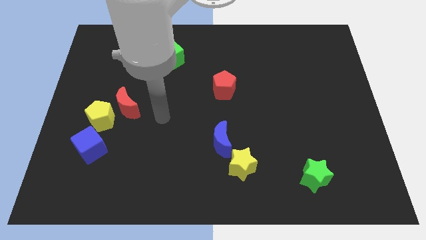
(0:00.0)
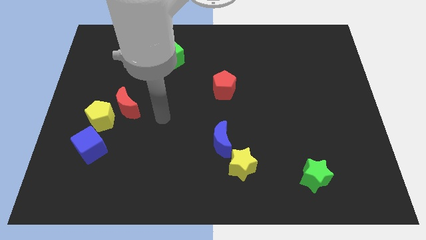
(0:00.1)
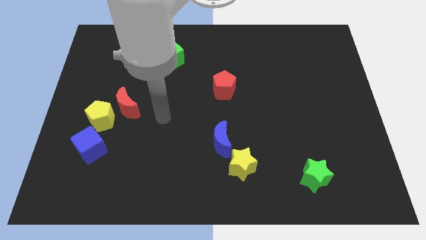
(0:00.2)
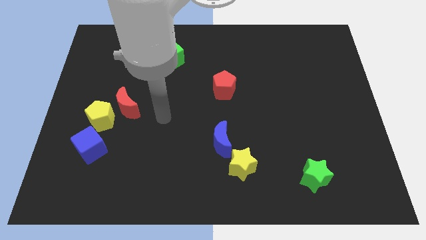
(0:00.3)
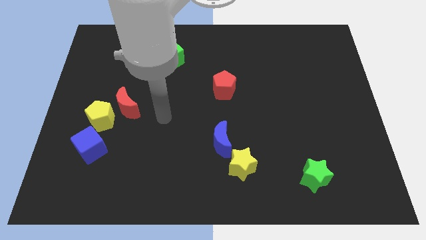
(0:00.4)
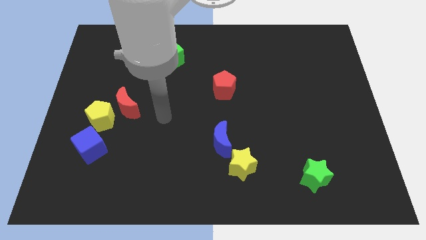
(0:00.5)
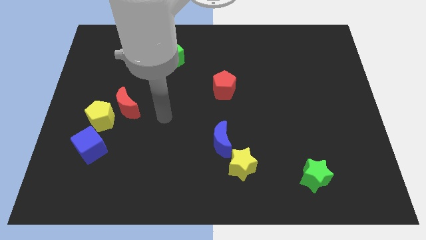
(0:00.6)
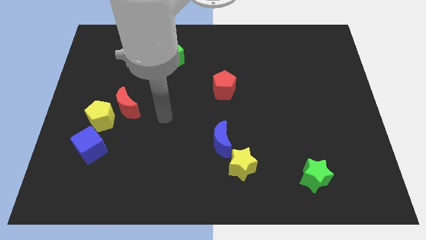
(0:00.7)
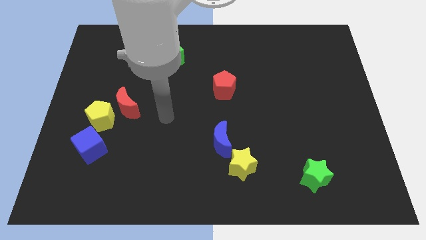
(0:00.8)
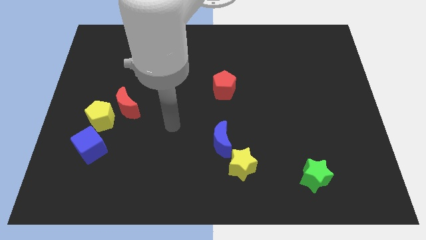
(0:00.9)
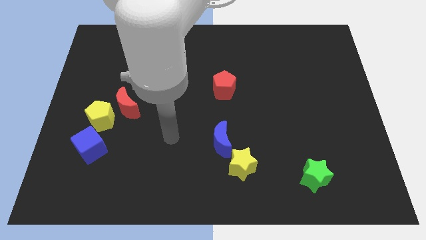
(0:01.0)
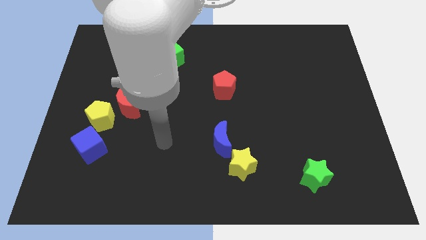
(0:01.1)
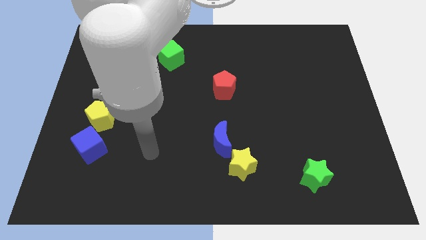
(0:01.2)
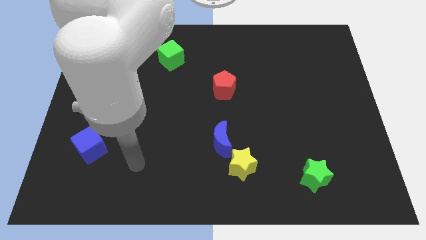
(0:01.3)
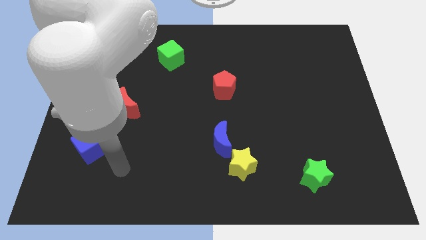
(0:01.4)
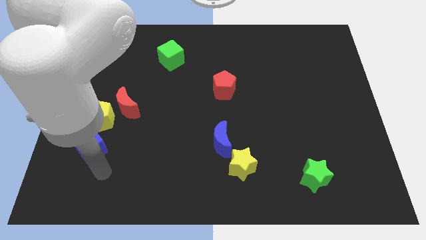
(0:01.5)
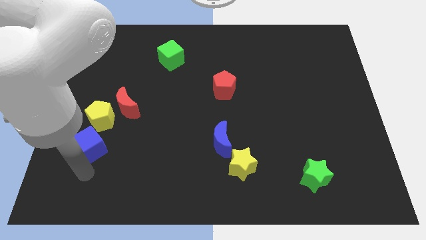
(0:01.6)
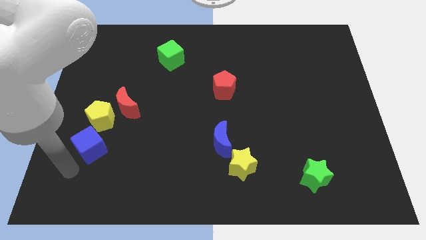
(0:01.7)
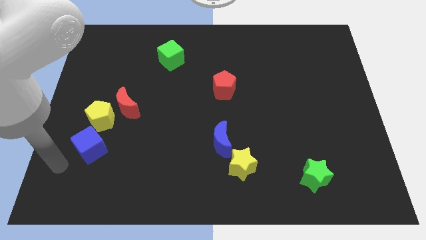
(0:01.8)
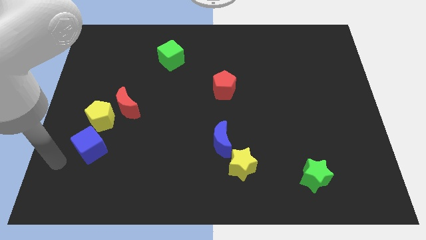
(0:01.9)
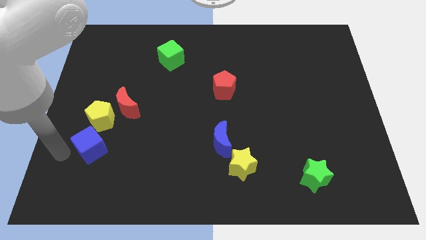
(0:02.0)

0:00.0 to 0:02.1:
place the arm at the left of the blue cube

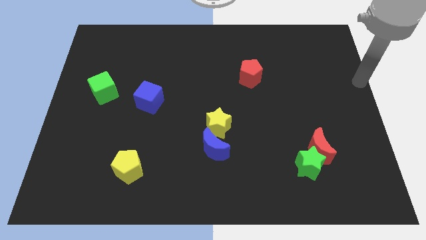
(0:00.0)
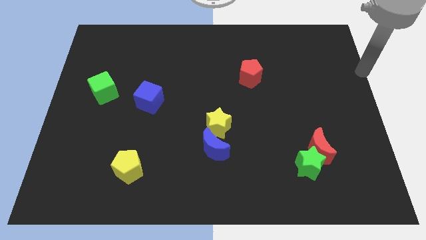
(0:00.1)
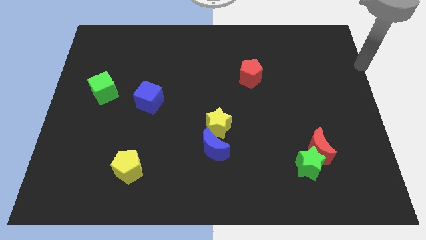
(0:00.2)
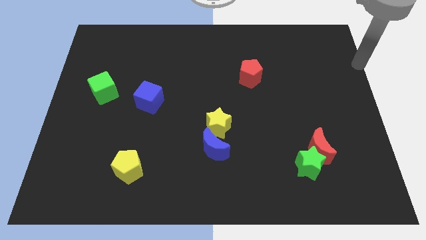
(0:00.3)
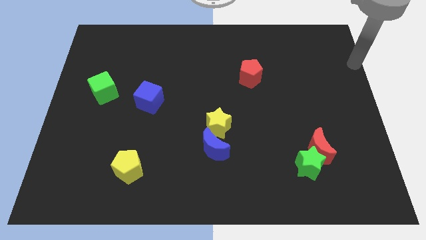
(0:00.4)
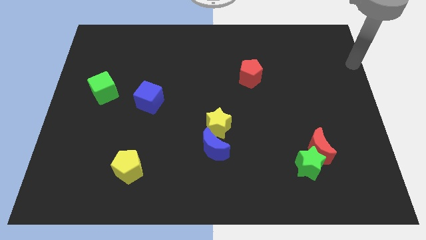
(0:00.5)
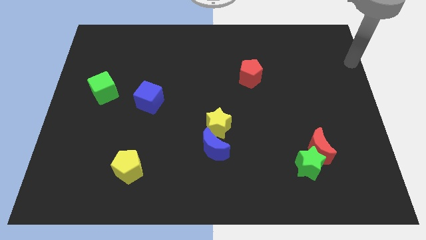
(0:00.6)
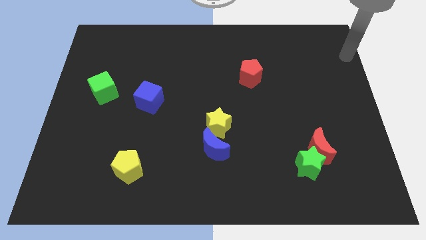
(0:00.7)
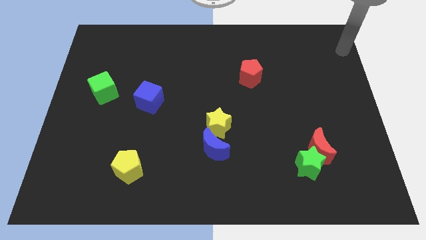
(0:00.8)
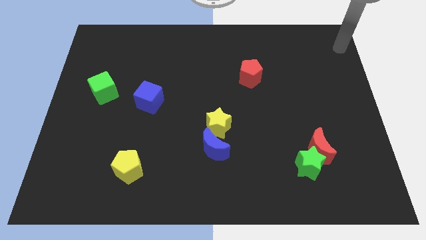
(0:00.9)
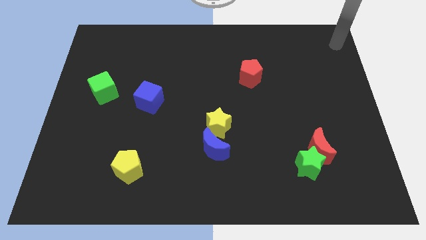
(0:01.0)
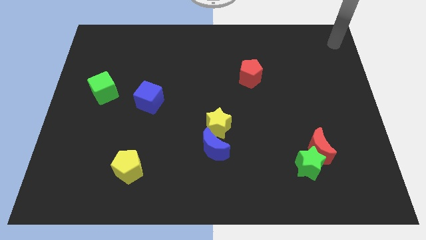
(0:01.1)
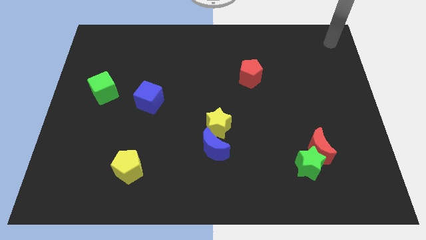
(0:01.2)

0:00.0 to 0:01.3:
place your arm to the top right corner of the board

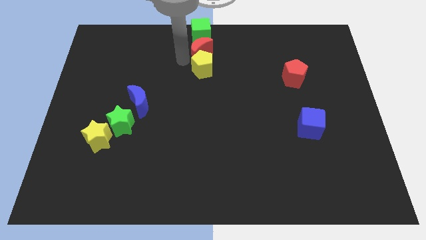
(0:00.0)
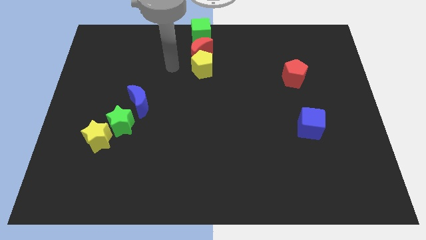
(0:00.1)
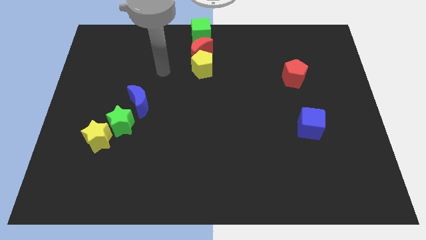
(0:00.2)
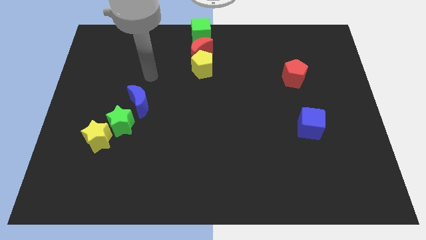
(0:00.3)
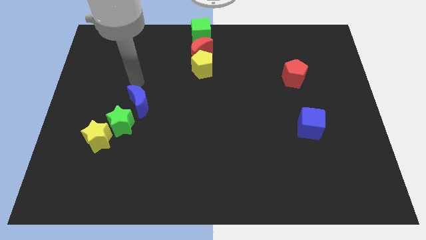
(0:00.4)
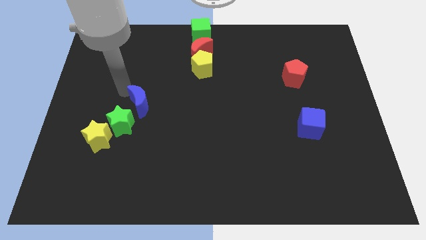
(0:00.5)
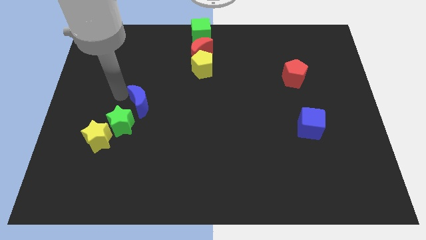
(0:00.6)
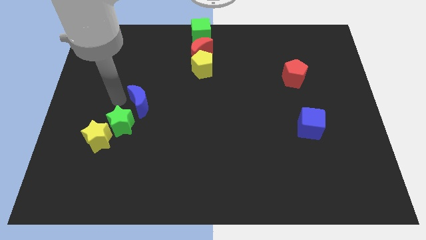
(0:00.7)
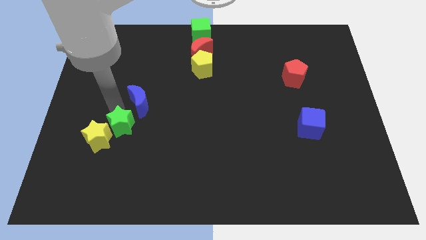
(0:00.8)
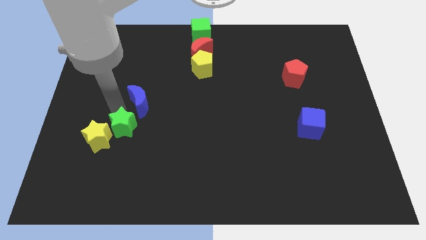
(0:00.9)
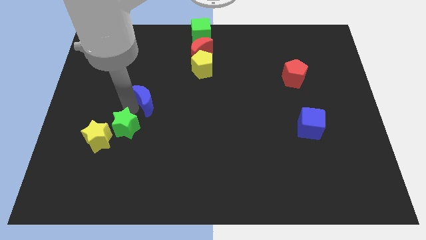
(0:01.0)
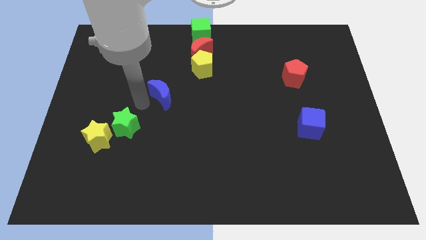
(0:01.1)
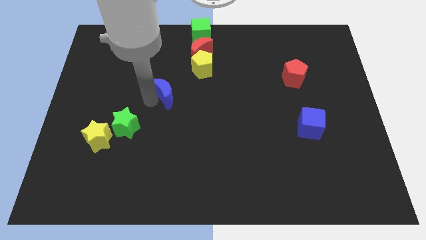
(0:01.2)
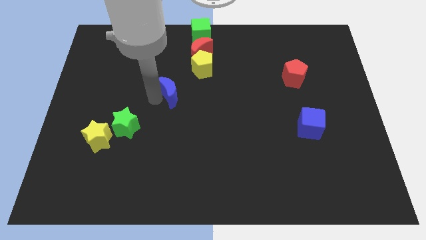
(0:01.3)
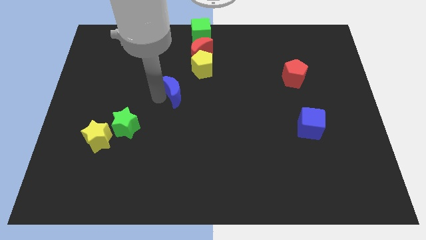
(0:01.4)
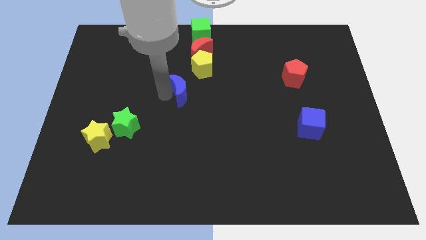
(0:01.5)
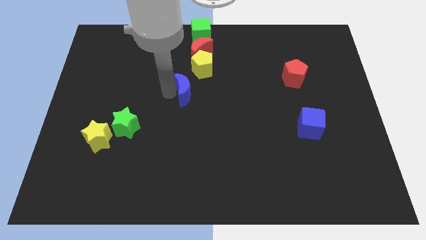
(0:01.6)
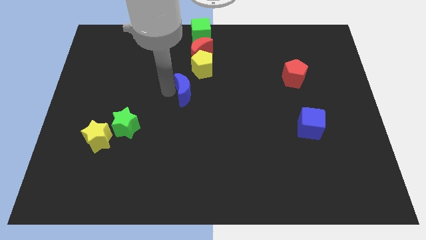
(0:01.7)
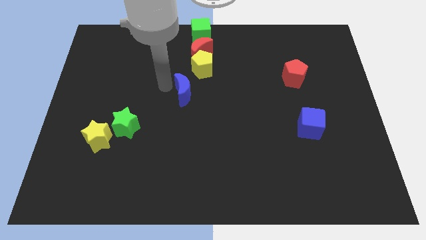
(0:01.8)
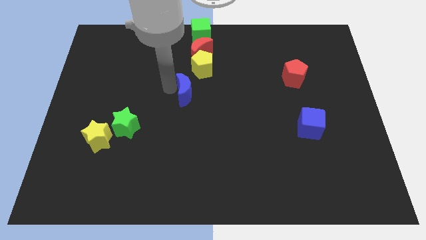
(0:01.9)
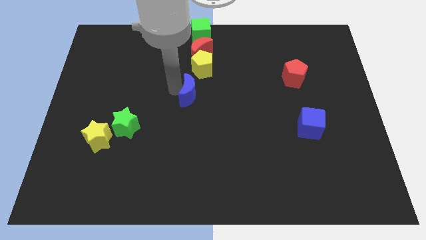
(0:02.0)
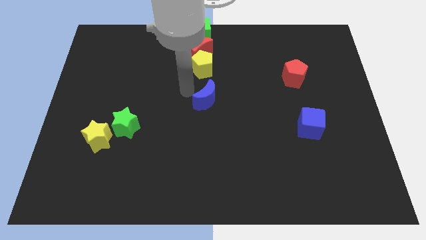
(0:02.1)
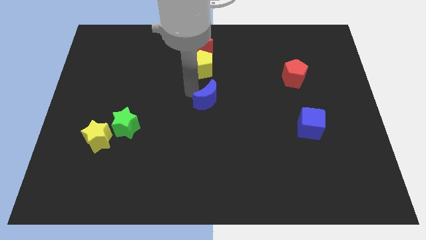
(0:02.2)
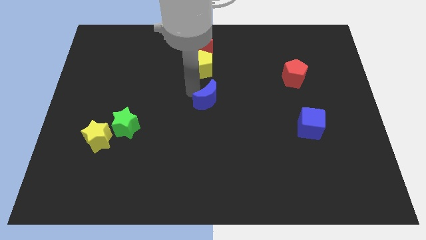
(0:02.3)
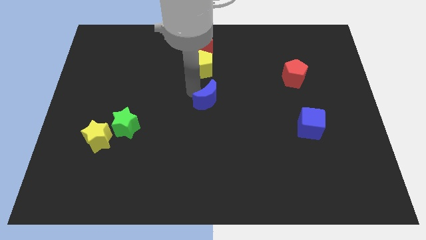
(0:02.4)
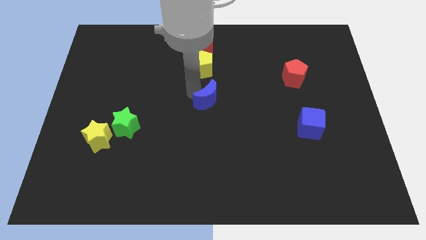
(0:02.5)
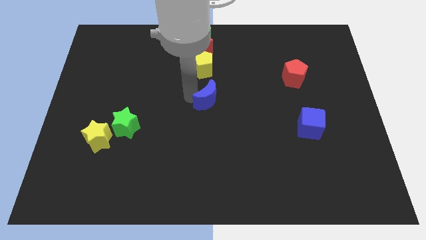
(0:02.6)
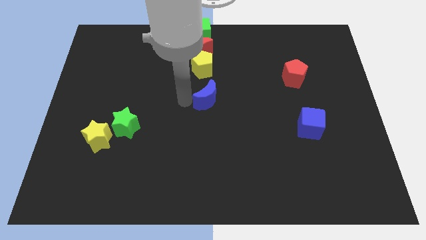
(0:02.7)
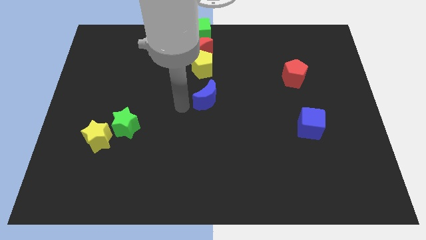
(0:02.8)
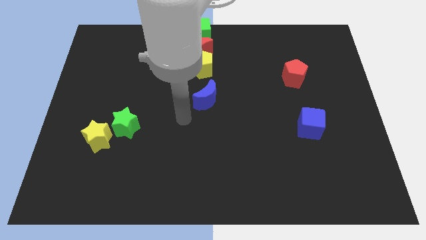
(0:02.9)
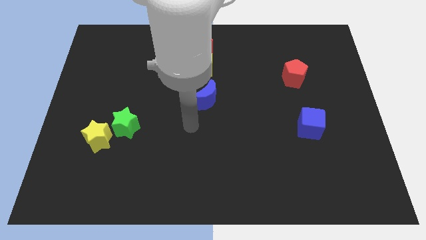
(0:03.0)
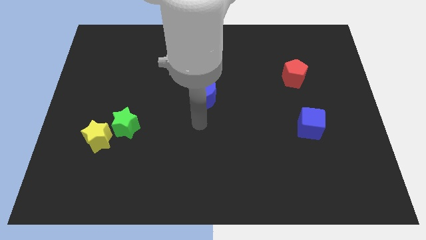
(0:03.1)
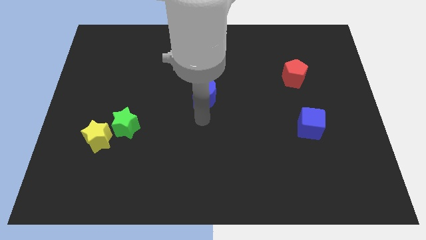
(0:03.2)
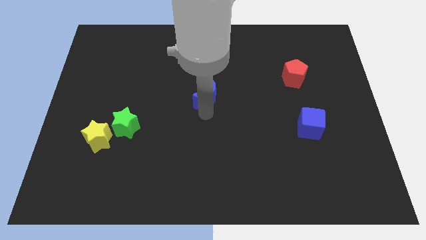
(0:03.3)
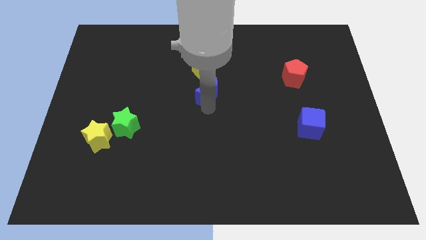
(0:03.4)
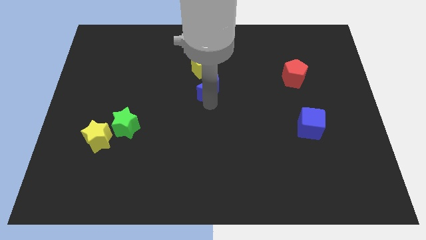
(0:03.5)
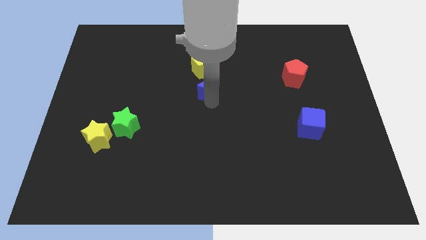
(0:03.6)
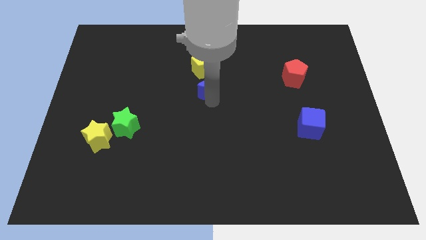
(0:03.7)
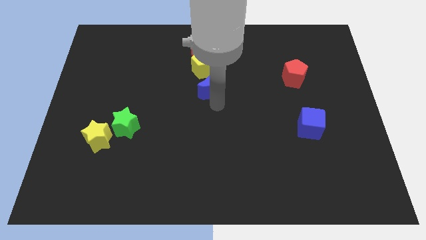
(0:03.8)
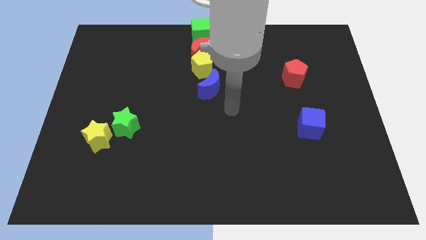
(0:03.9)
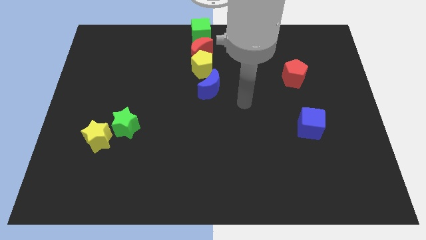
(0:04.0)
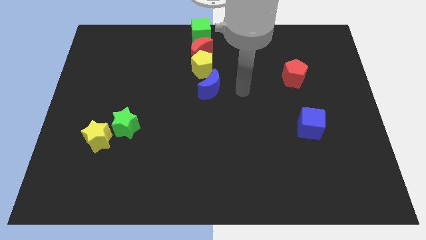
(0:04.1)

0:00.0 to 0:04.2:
move the blue crescent to the bottom of the yellow pentagon

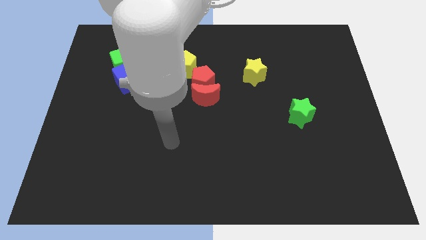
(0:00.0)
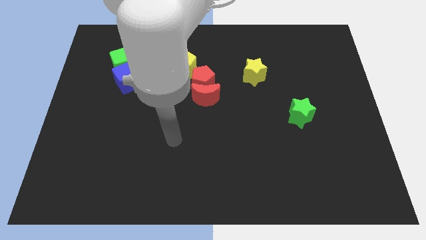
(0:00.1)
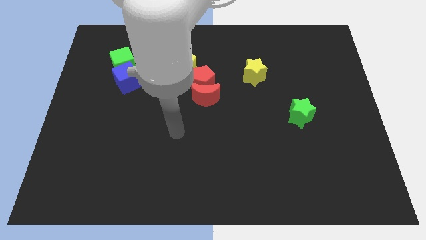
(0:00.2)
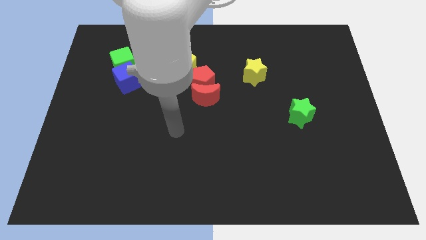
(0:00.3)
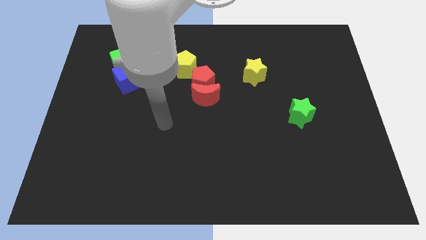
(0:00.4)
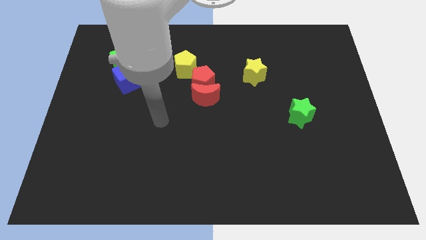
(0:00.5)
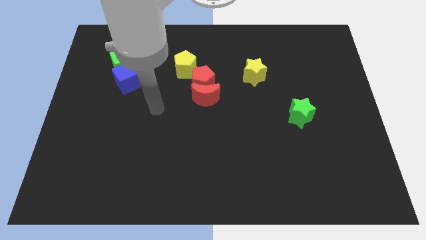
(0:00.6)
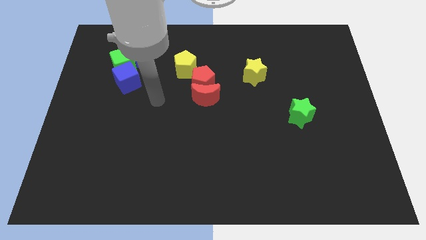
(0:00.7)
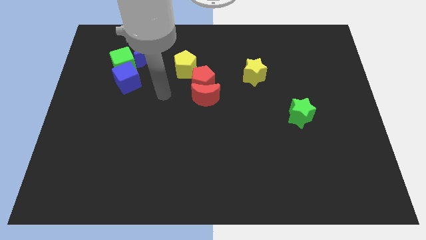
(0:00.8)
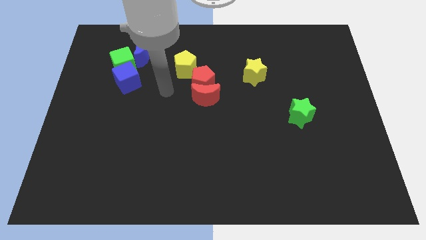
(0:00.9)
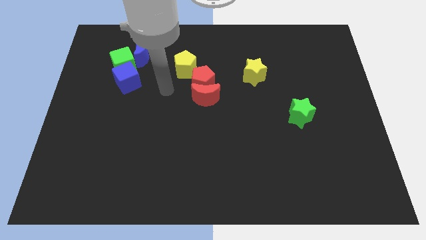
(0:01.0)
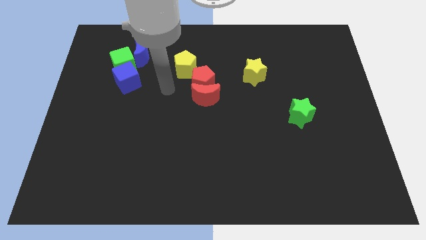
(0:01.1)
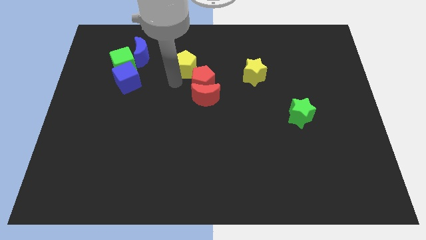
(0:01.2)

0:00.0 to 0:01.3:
move your arm towards the bottom of the yellow pantagon

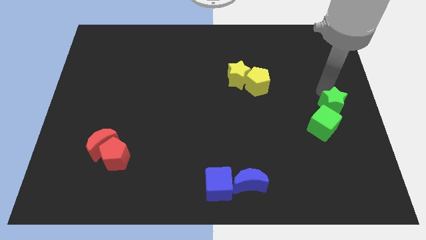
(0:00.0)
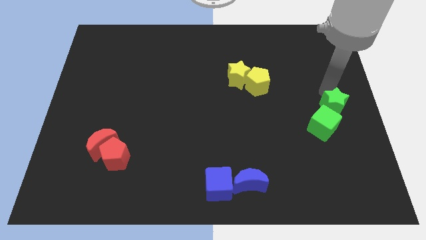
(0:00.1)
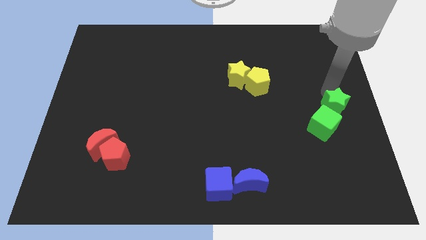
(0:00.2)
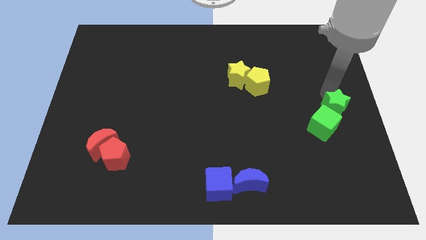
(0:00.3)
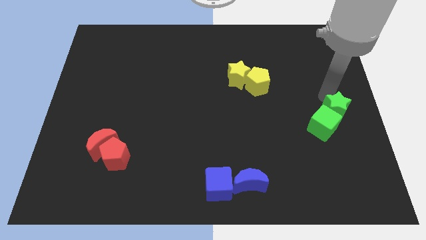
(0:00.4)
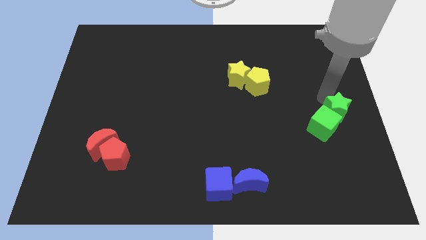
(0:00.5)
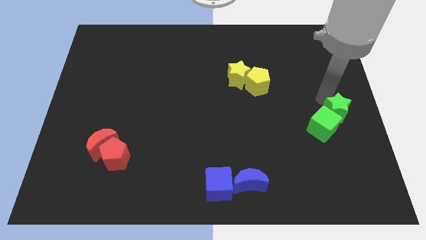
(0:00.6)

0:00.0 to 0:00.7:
push the green star towards the green cube
